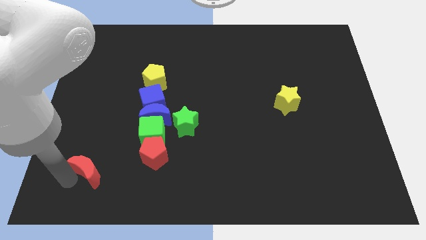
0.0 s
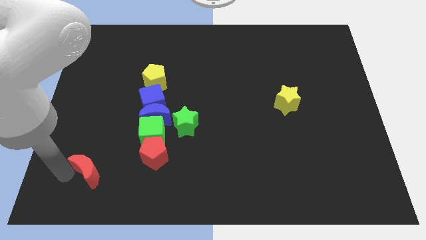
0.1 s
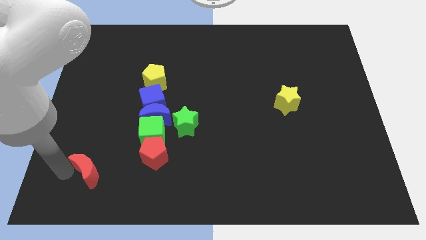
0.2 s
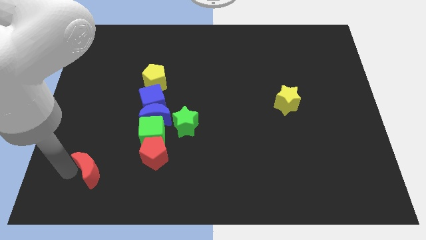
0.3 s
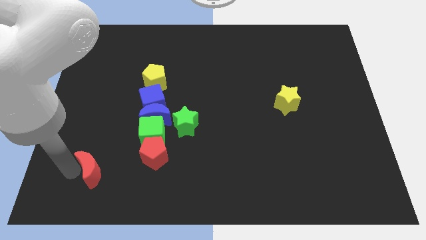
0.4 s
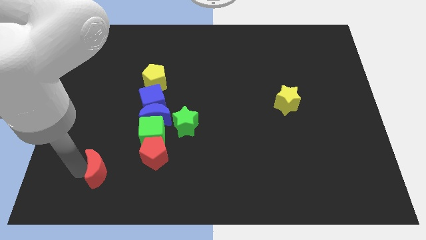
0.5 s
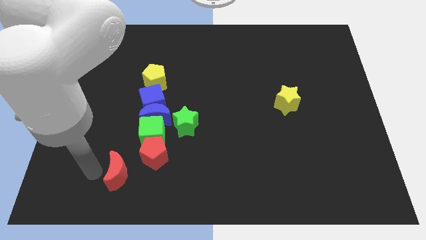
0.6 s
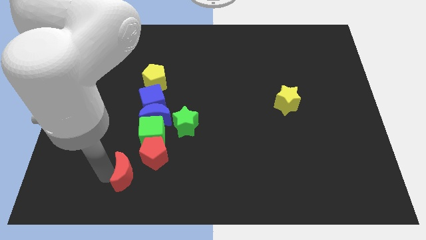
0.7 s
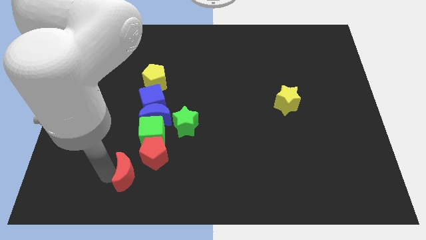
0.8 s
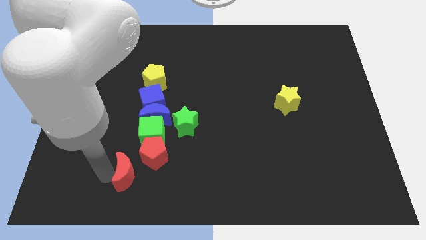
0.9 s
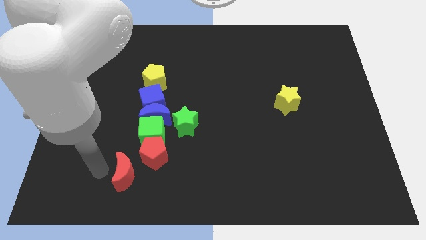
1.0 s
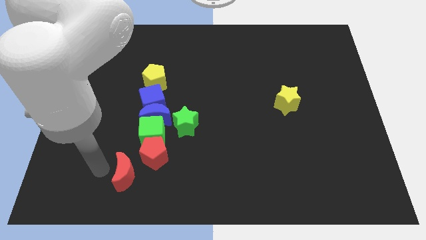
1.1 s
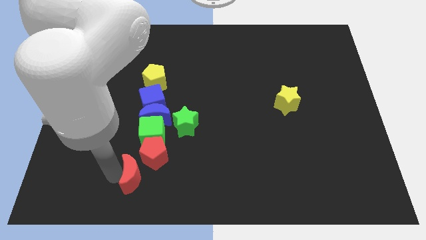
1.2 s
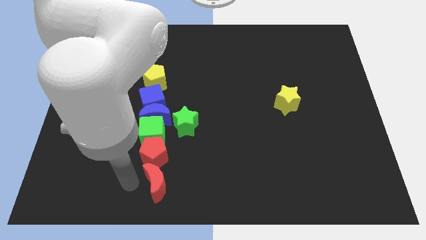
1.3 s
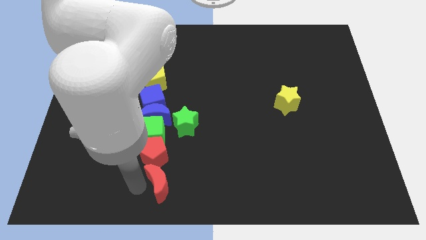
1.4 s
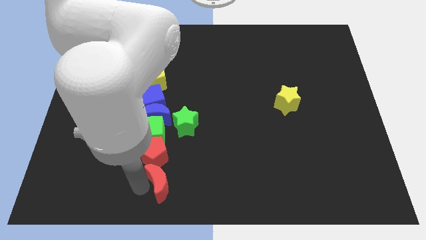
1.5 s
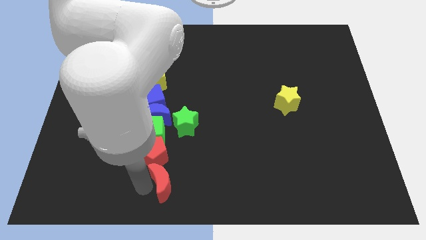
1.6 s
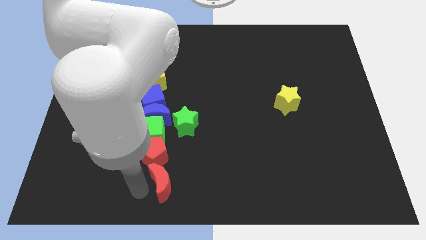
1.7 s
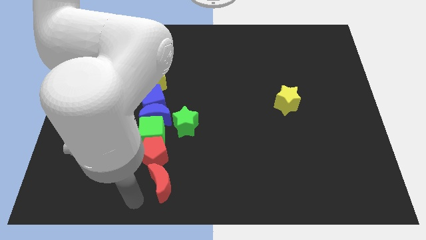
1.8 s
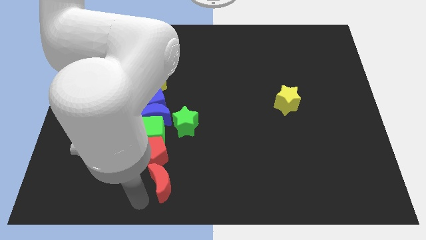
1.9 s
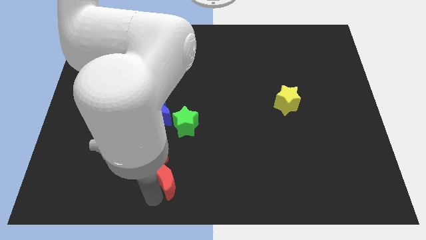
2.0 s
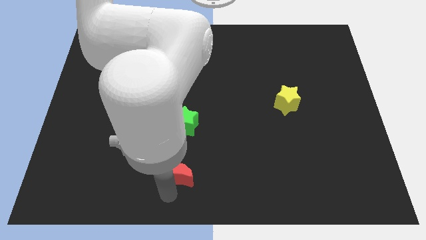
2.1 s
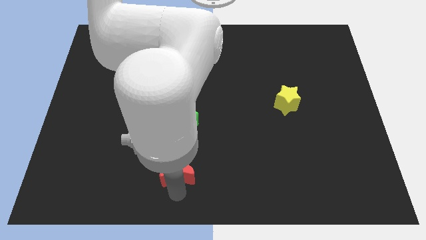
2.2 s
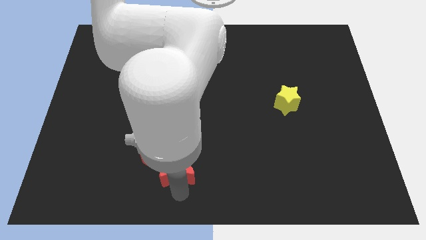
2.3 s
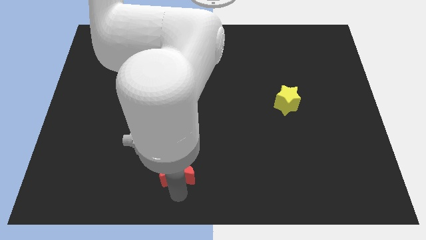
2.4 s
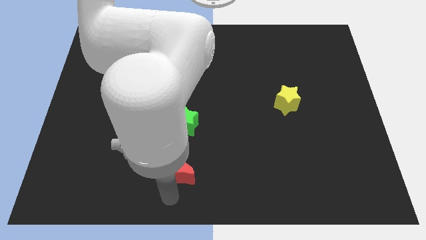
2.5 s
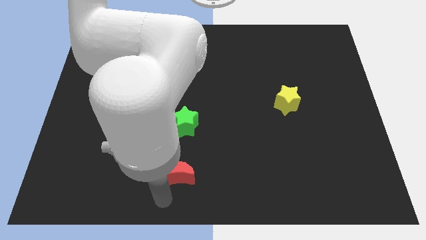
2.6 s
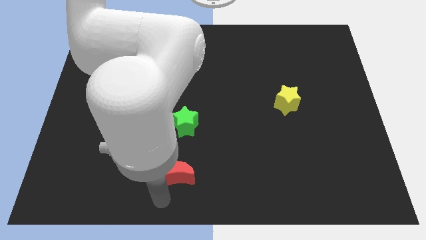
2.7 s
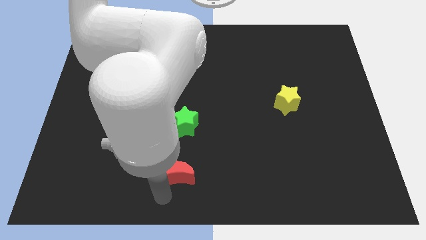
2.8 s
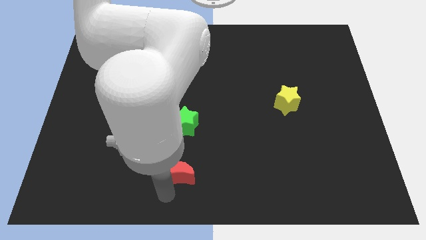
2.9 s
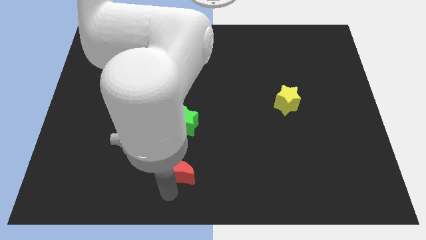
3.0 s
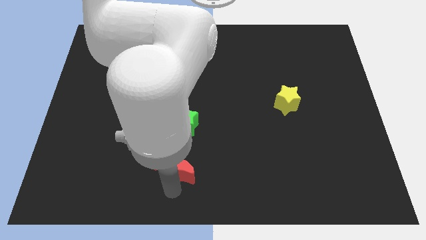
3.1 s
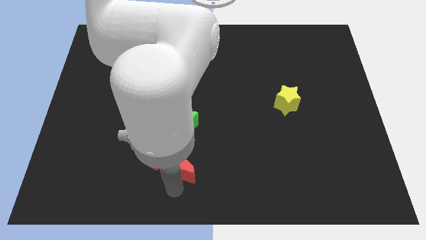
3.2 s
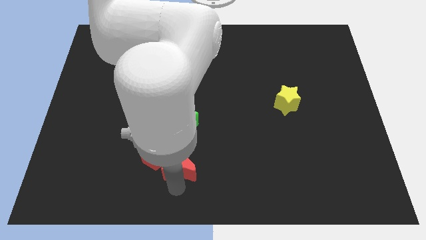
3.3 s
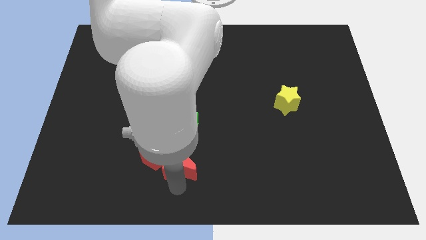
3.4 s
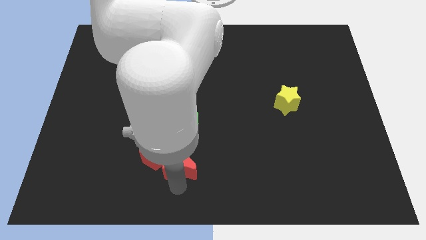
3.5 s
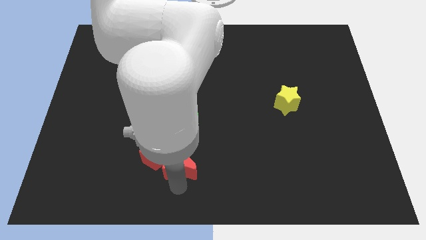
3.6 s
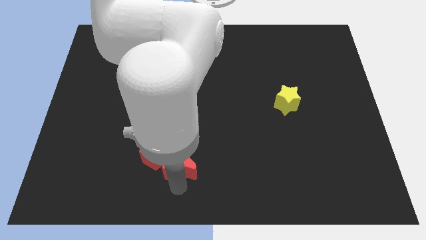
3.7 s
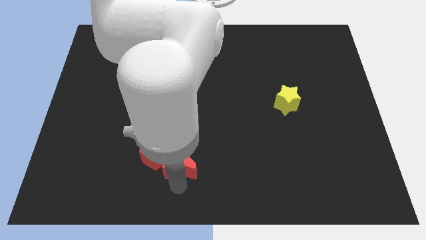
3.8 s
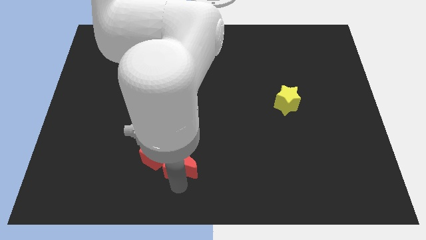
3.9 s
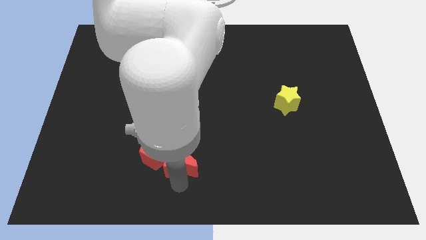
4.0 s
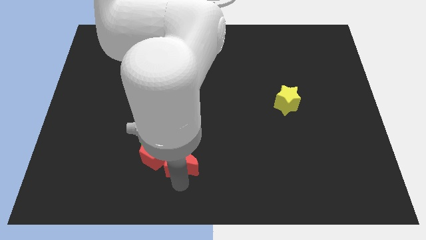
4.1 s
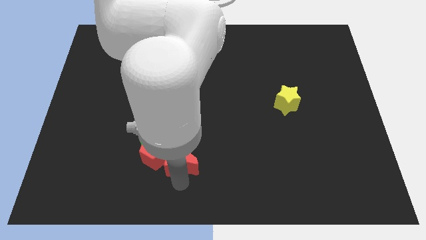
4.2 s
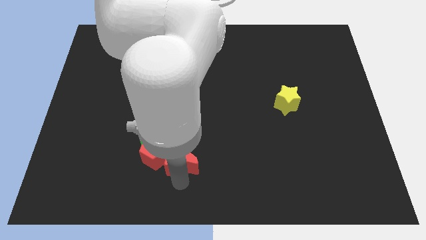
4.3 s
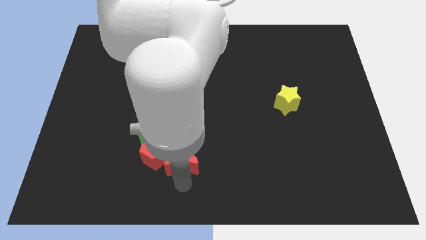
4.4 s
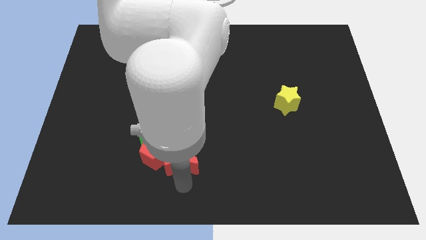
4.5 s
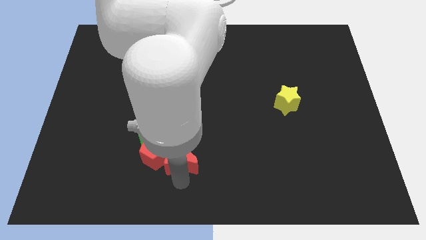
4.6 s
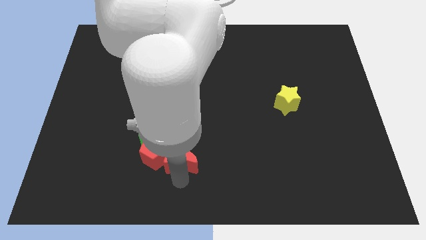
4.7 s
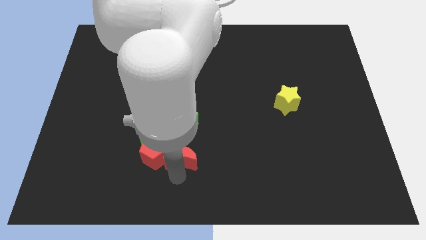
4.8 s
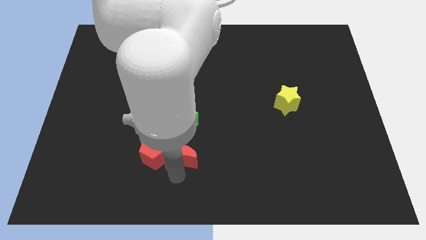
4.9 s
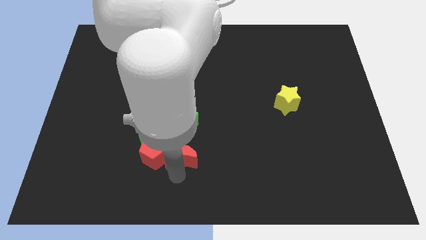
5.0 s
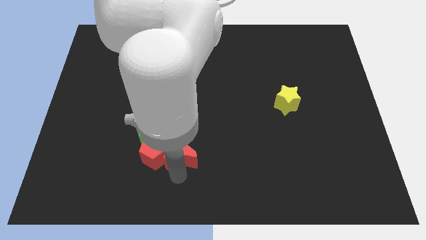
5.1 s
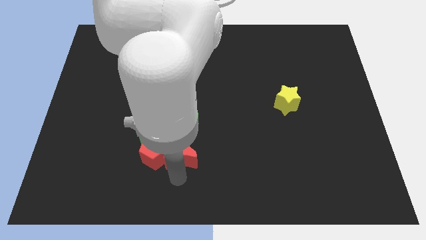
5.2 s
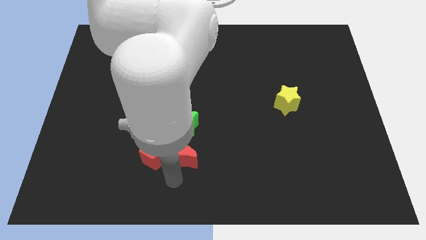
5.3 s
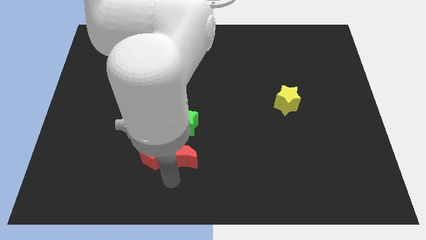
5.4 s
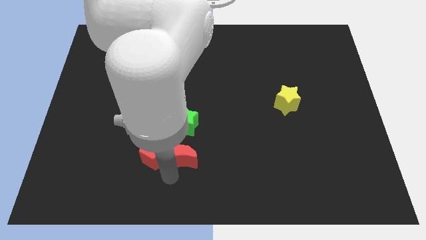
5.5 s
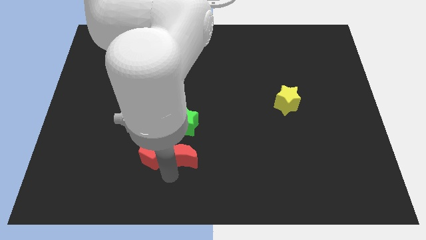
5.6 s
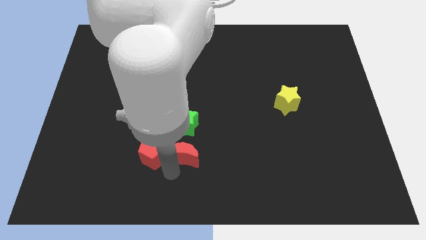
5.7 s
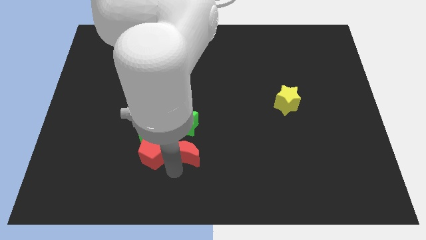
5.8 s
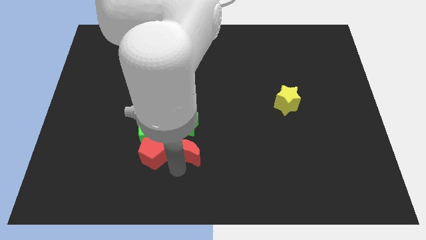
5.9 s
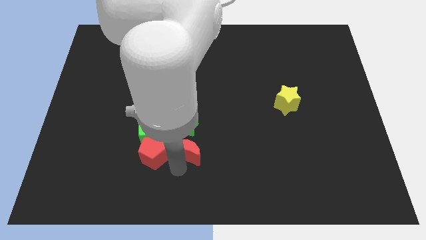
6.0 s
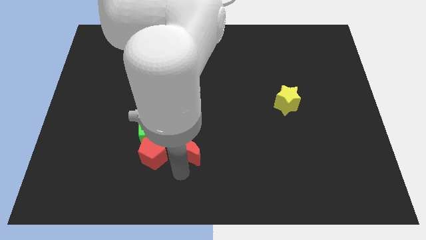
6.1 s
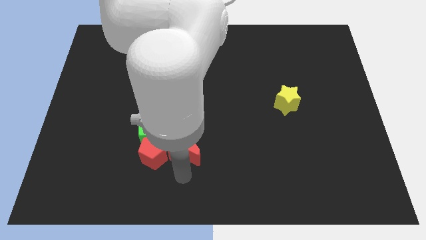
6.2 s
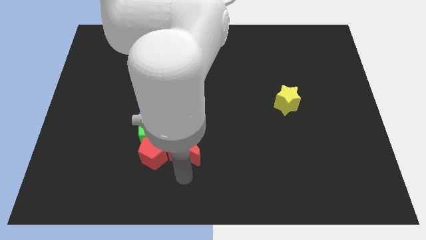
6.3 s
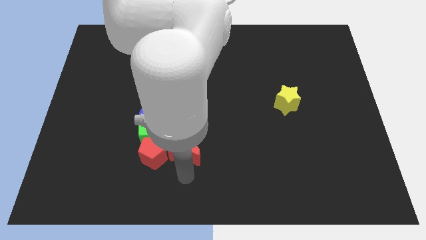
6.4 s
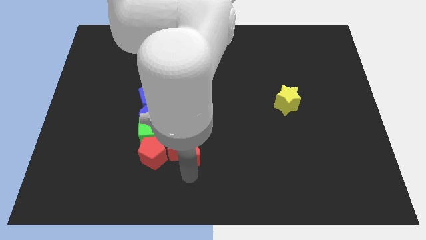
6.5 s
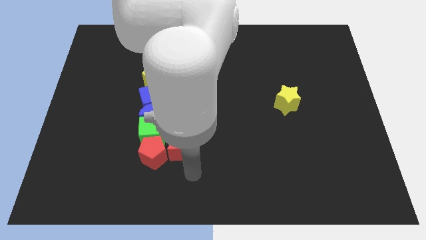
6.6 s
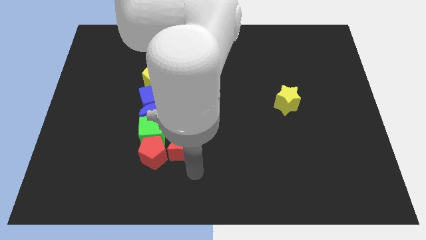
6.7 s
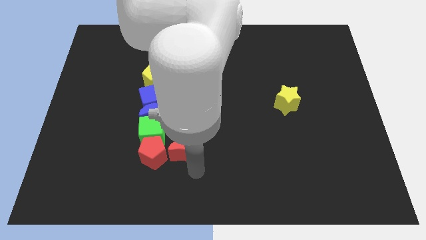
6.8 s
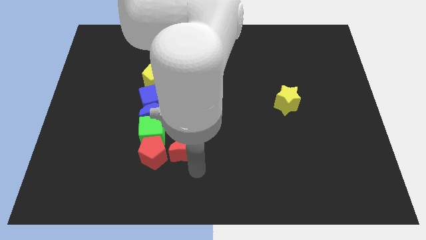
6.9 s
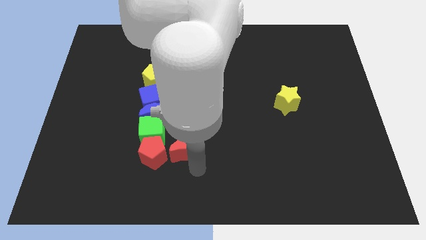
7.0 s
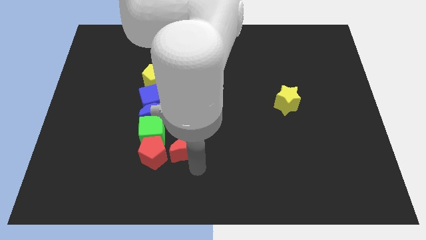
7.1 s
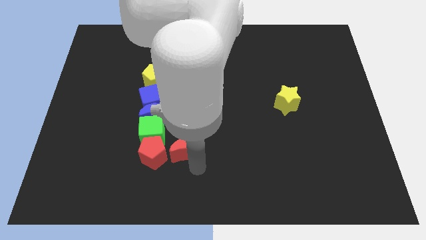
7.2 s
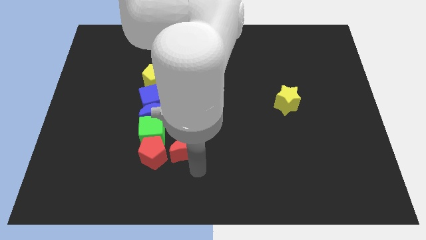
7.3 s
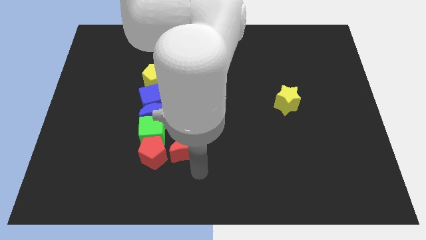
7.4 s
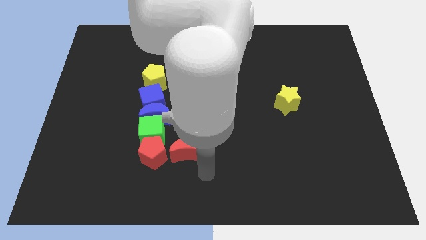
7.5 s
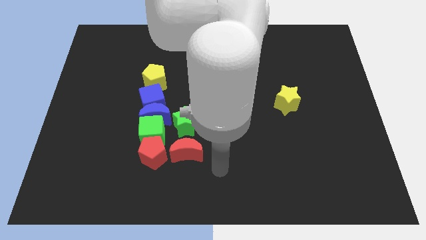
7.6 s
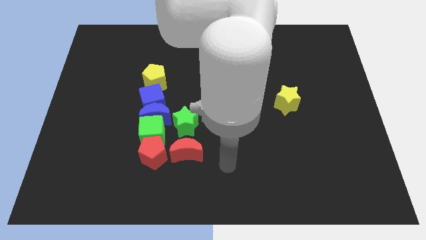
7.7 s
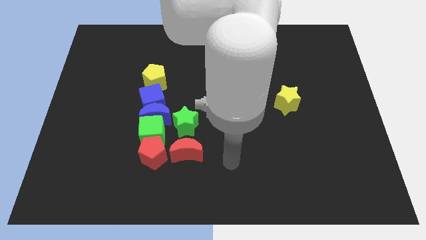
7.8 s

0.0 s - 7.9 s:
push the red crescent right to the red pentagon

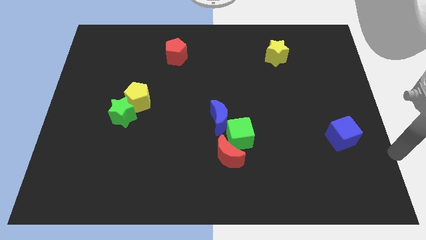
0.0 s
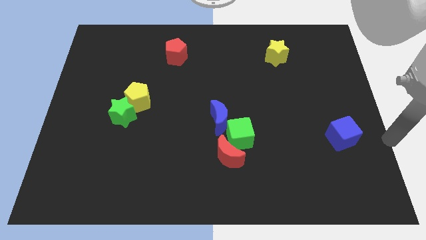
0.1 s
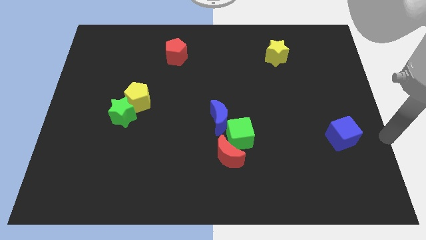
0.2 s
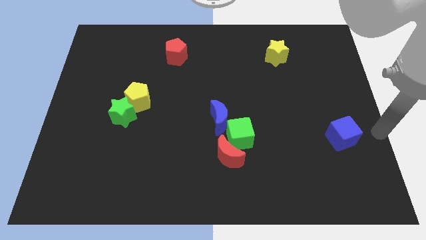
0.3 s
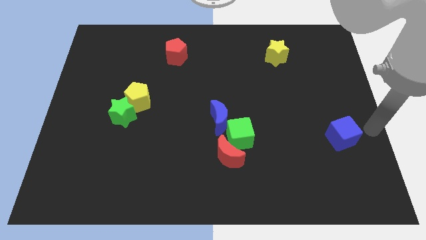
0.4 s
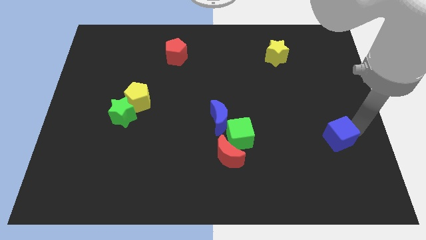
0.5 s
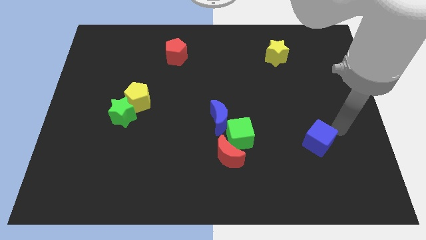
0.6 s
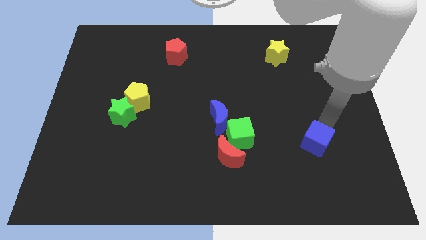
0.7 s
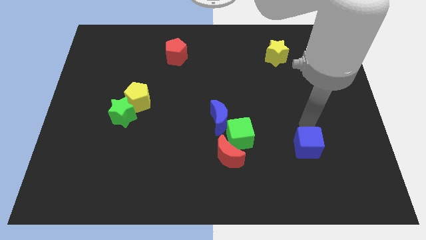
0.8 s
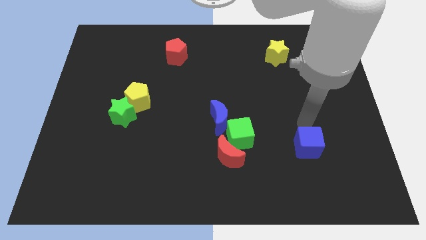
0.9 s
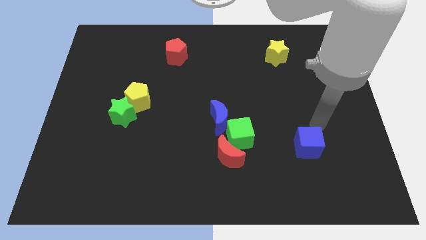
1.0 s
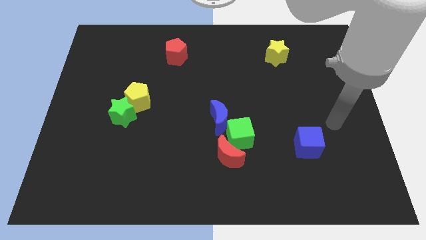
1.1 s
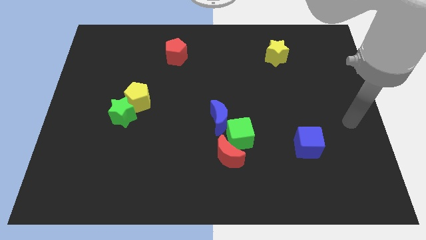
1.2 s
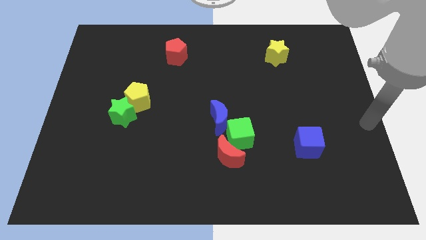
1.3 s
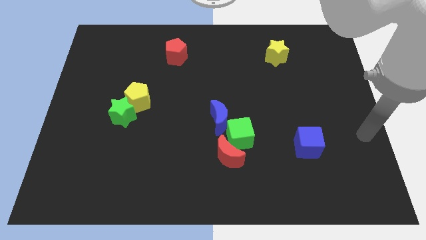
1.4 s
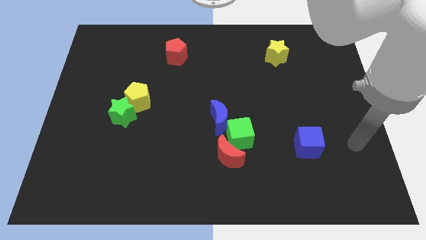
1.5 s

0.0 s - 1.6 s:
slightly push the blue cube towards the left
